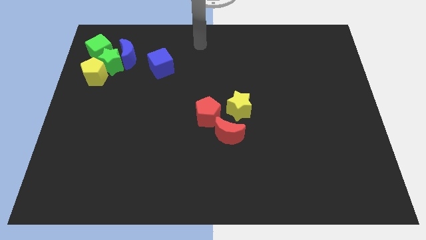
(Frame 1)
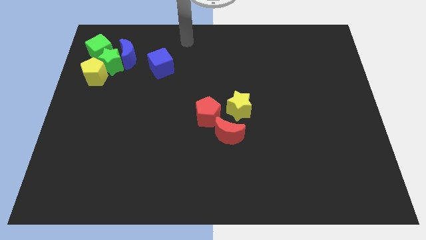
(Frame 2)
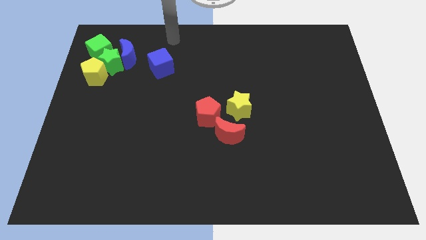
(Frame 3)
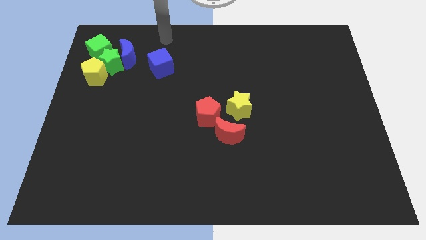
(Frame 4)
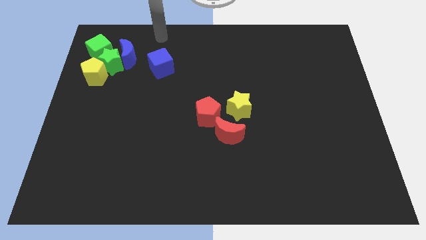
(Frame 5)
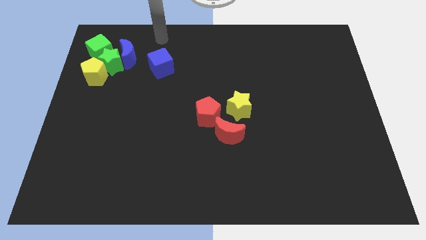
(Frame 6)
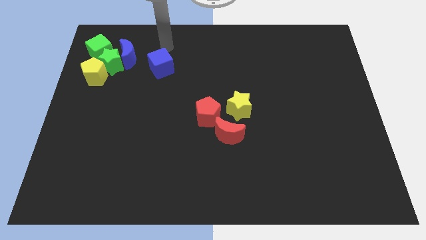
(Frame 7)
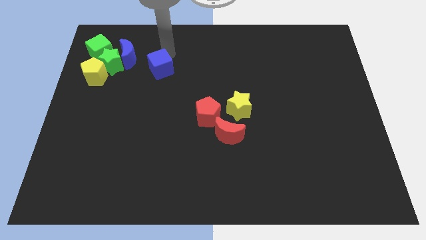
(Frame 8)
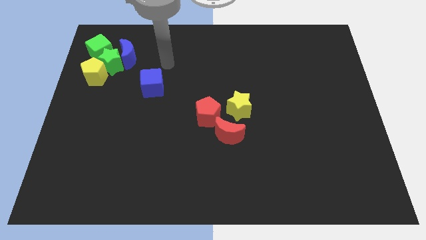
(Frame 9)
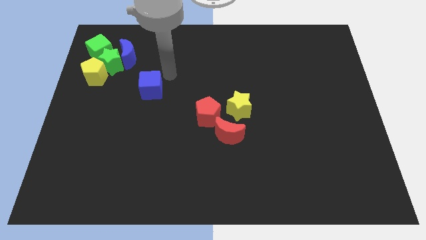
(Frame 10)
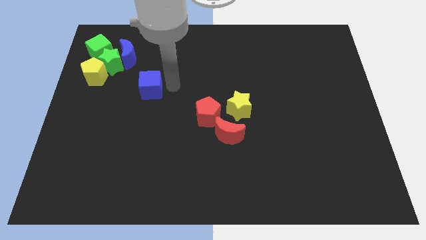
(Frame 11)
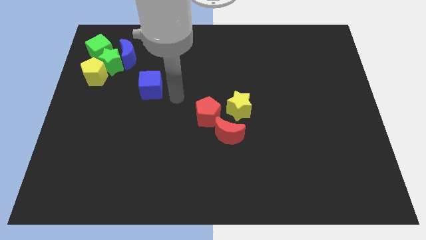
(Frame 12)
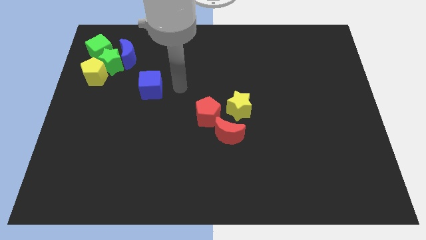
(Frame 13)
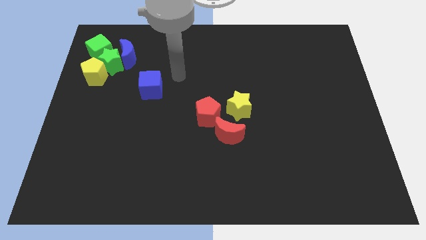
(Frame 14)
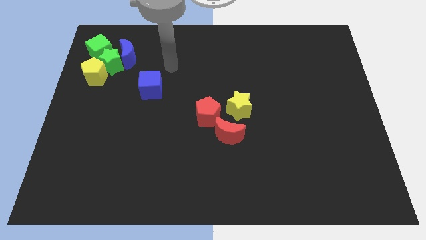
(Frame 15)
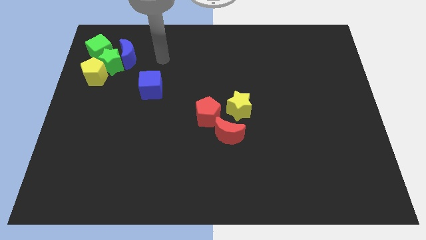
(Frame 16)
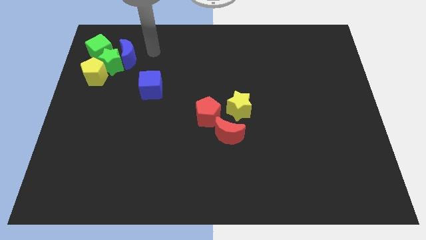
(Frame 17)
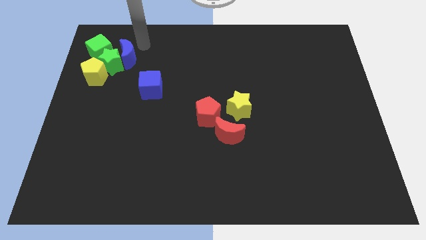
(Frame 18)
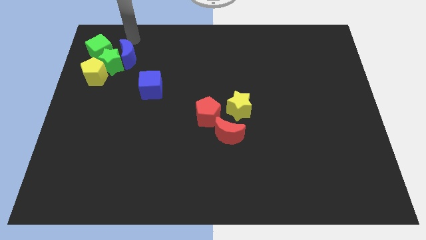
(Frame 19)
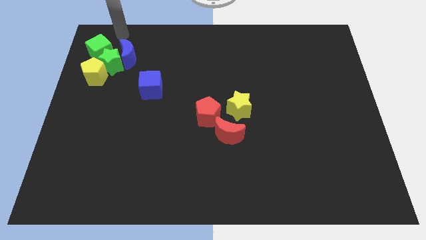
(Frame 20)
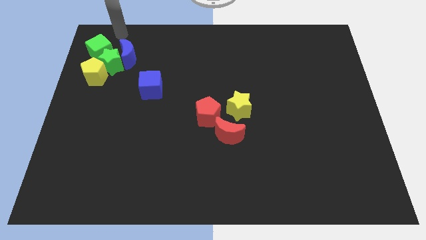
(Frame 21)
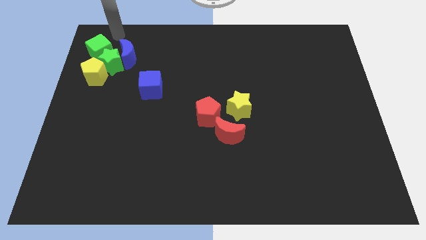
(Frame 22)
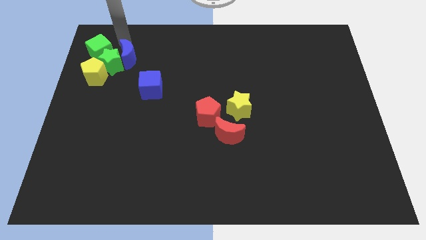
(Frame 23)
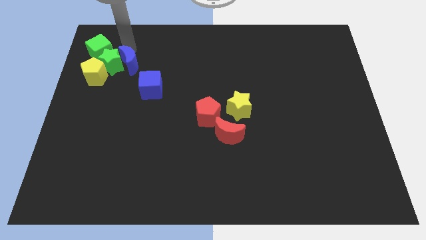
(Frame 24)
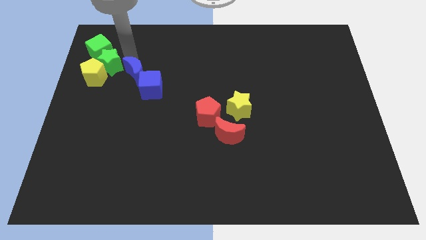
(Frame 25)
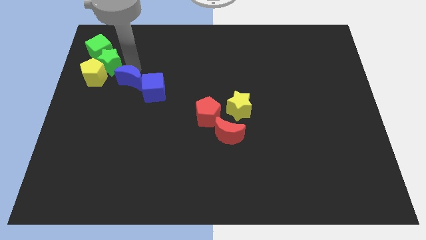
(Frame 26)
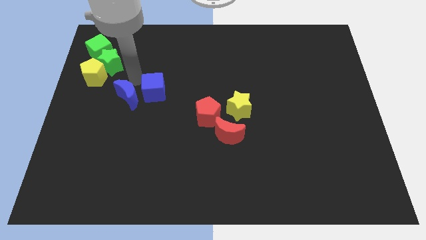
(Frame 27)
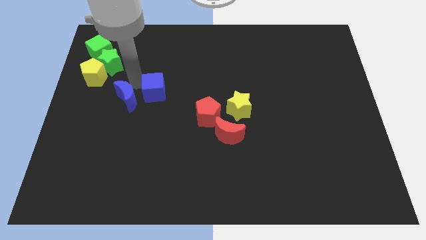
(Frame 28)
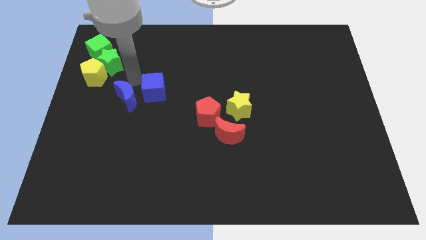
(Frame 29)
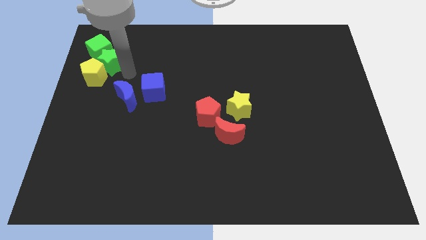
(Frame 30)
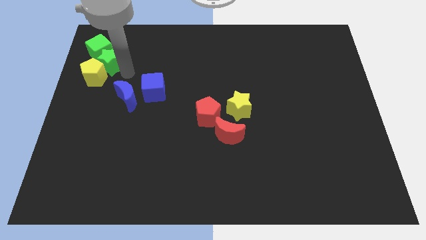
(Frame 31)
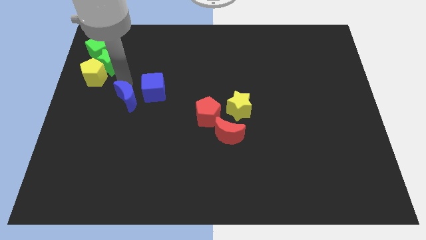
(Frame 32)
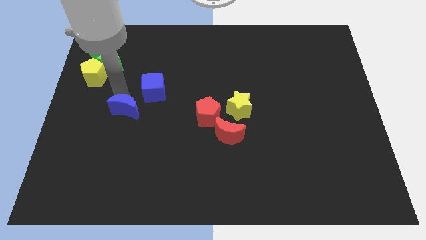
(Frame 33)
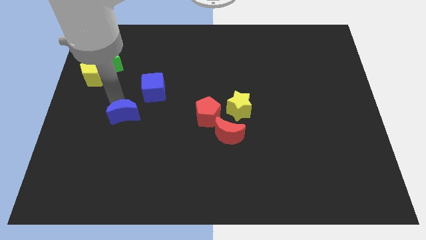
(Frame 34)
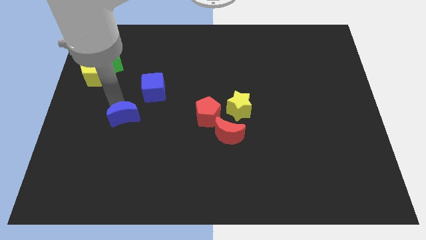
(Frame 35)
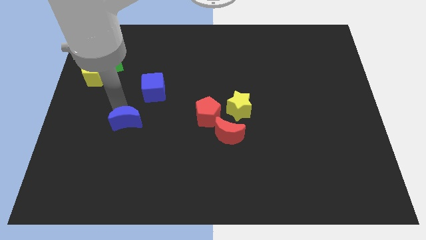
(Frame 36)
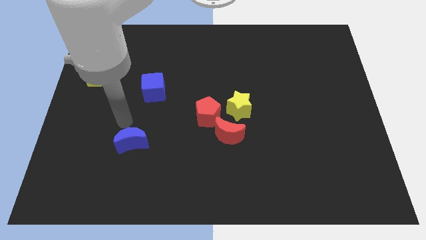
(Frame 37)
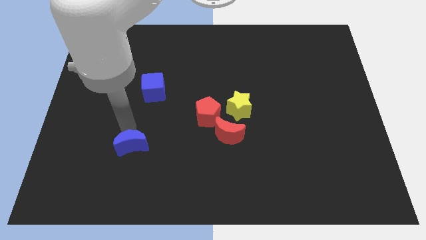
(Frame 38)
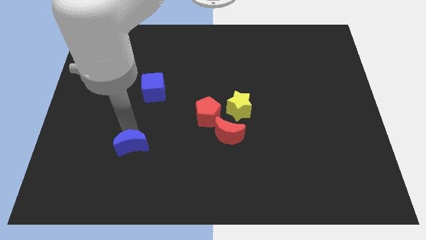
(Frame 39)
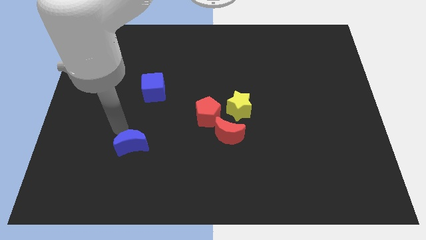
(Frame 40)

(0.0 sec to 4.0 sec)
move the blue semi circle away from the green star

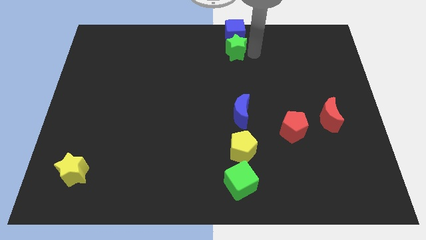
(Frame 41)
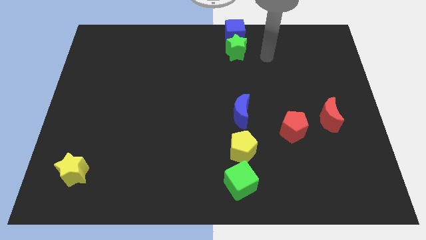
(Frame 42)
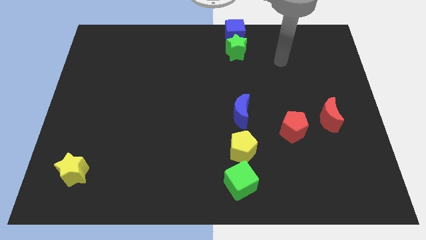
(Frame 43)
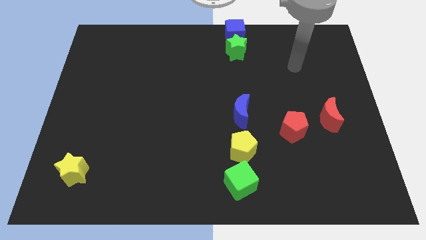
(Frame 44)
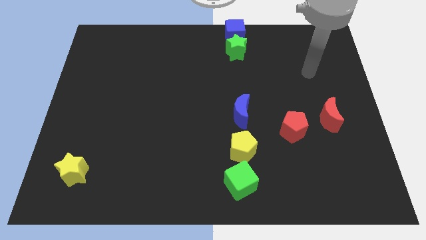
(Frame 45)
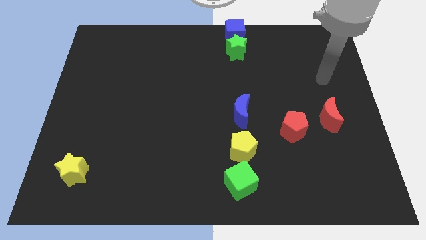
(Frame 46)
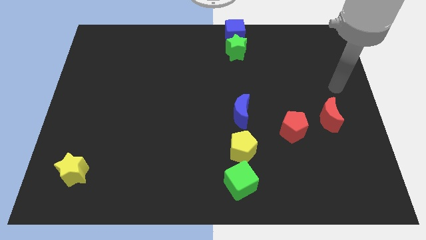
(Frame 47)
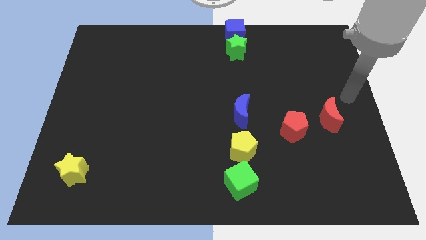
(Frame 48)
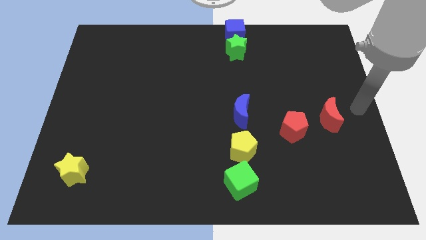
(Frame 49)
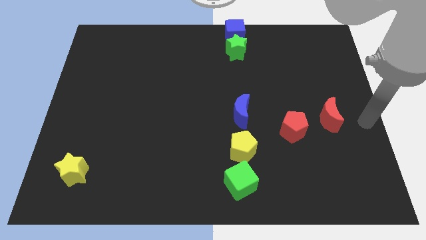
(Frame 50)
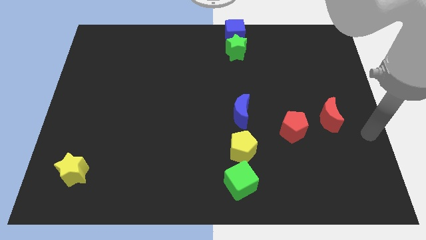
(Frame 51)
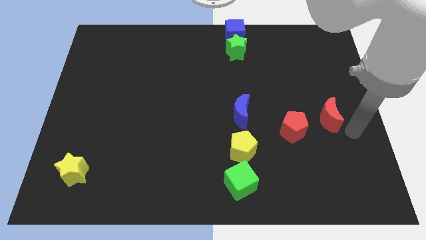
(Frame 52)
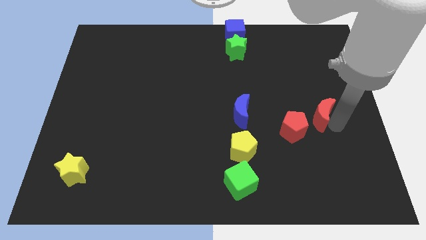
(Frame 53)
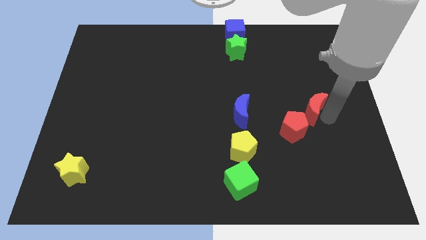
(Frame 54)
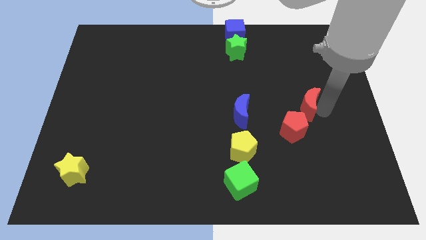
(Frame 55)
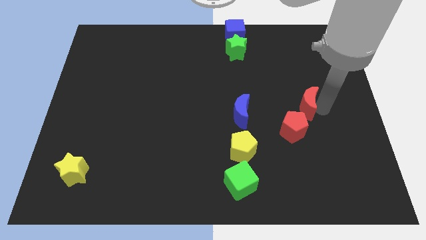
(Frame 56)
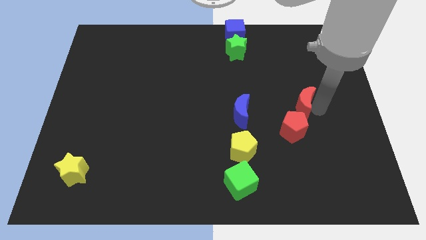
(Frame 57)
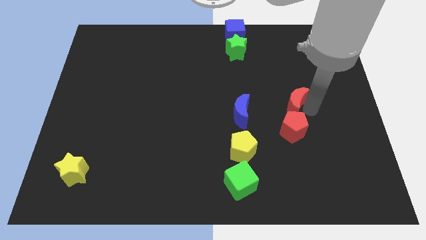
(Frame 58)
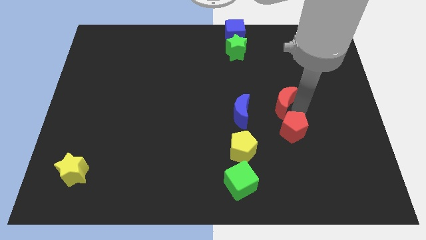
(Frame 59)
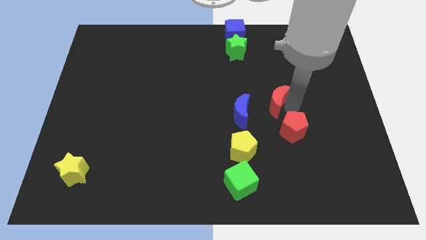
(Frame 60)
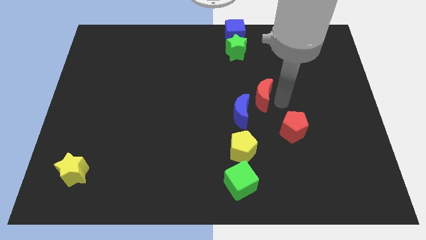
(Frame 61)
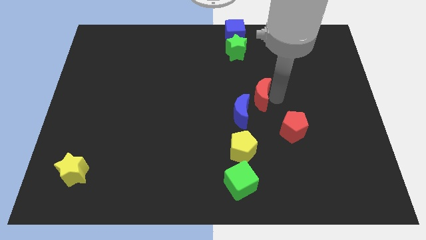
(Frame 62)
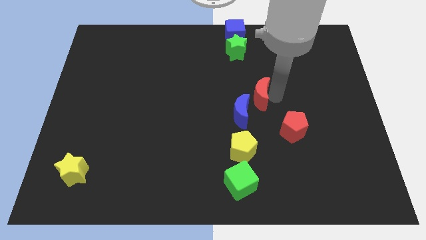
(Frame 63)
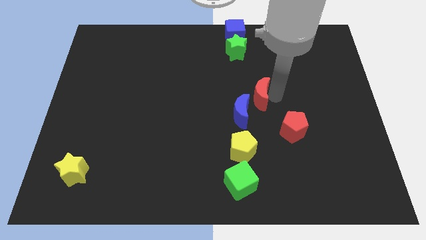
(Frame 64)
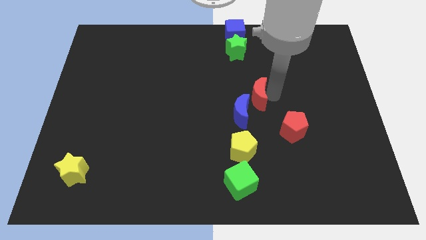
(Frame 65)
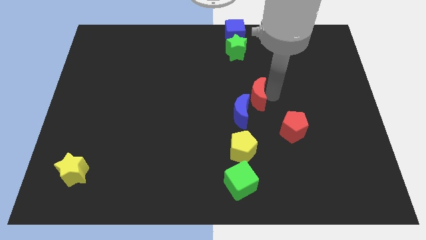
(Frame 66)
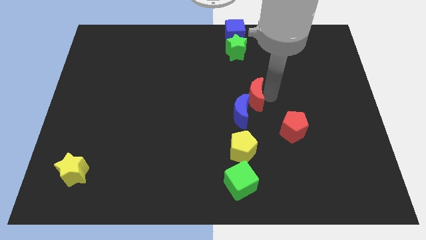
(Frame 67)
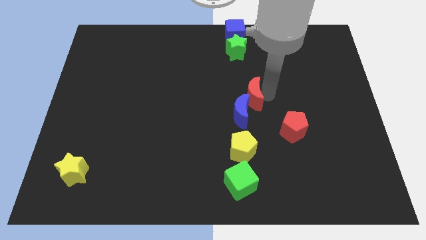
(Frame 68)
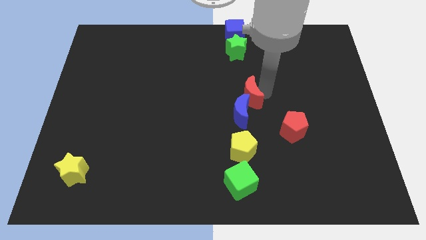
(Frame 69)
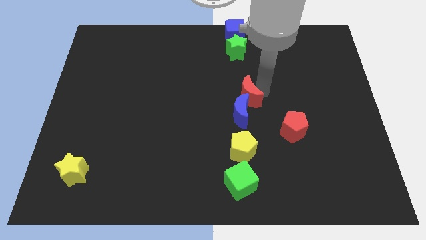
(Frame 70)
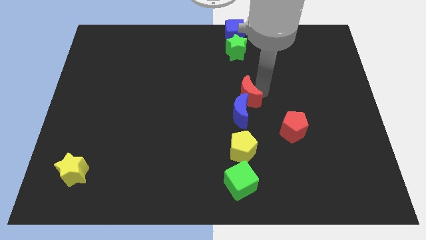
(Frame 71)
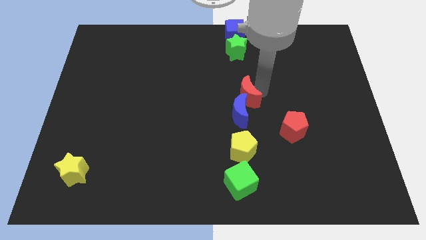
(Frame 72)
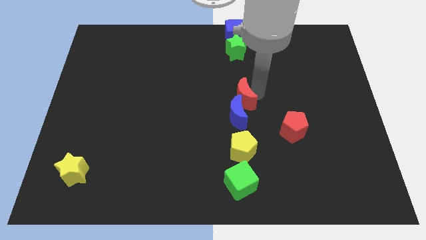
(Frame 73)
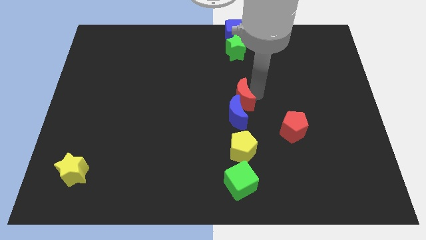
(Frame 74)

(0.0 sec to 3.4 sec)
slide the red crescent close to the blue crescent

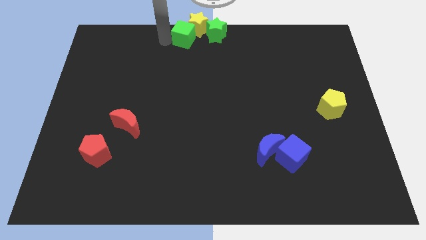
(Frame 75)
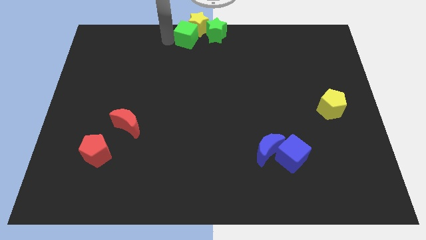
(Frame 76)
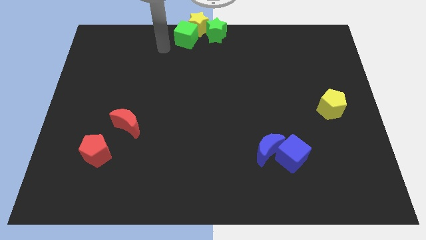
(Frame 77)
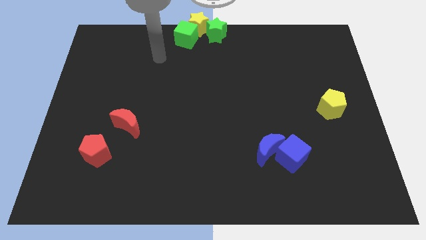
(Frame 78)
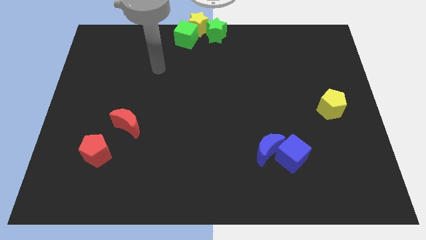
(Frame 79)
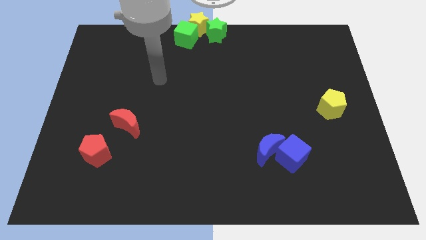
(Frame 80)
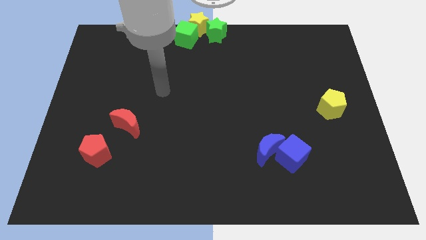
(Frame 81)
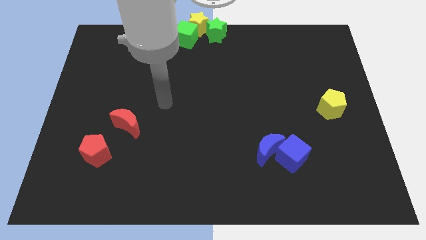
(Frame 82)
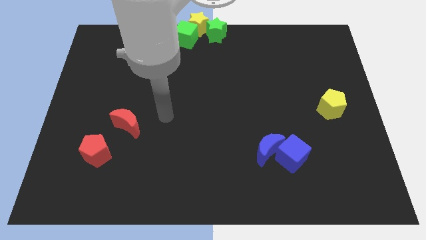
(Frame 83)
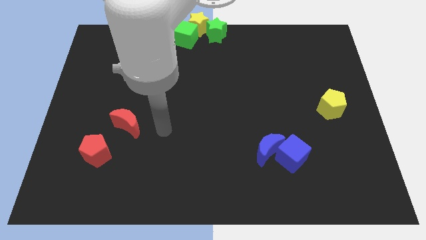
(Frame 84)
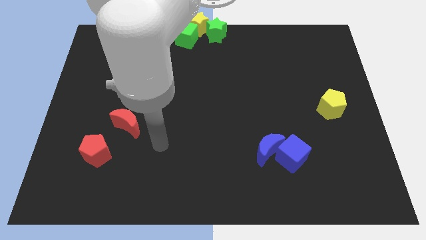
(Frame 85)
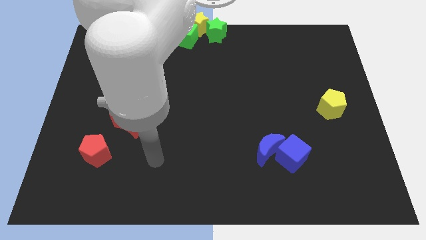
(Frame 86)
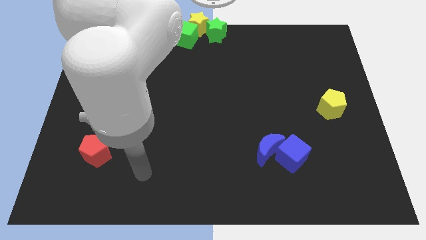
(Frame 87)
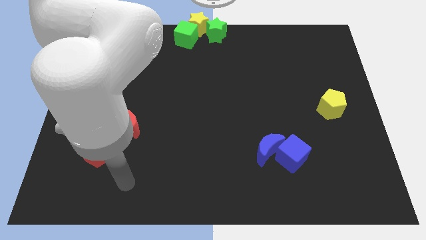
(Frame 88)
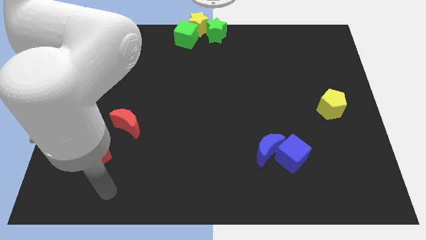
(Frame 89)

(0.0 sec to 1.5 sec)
move your arm away from the green cube

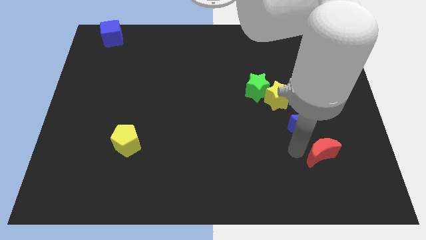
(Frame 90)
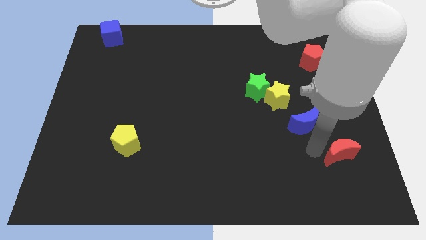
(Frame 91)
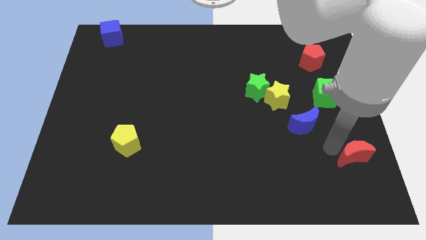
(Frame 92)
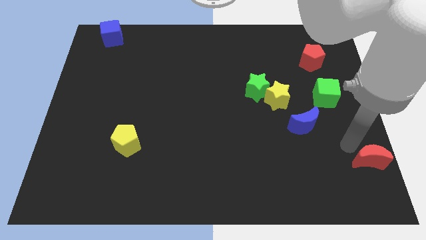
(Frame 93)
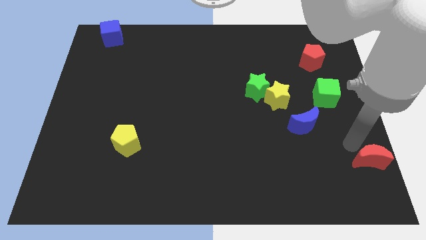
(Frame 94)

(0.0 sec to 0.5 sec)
place red crescent on the right side of the board
